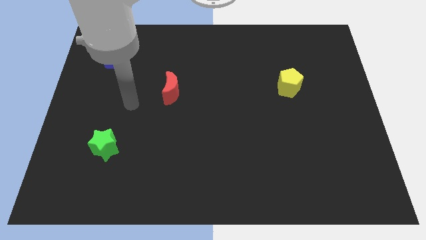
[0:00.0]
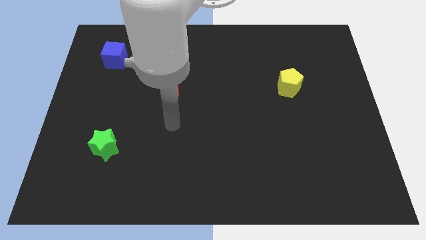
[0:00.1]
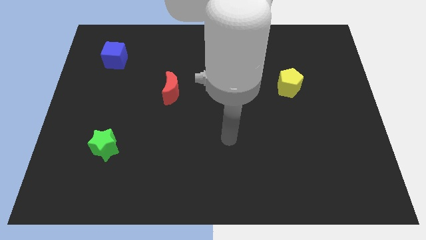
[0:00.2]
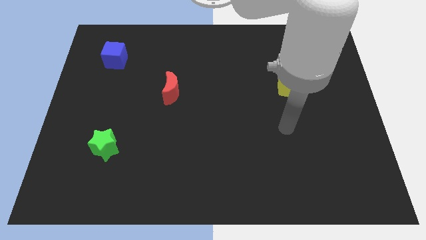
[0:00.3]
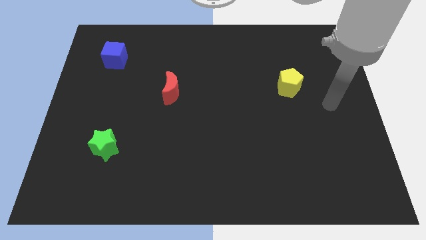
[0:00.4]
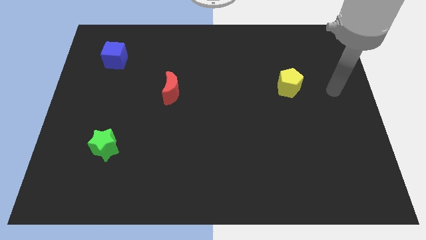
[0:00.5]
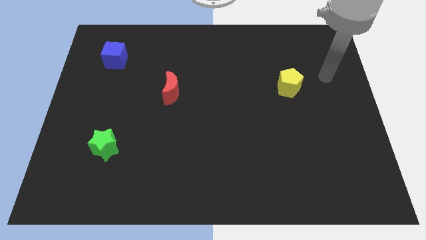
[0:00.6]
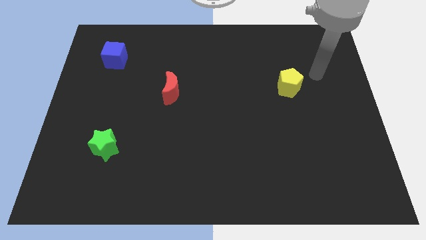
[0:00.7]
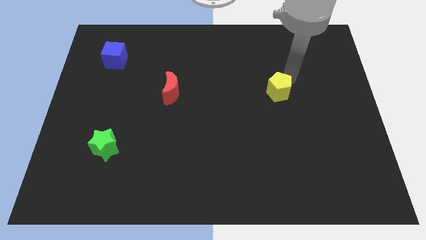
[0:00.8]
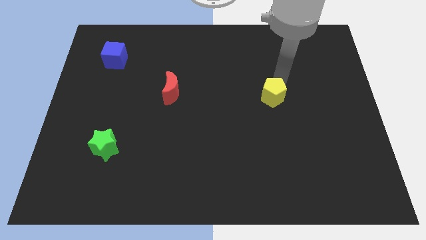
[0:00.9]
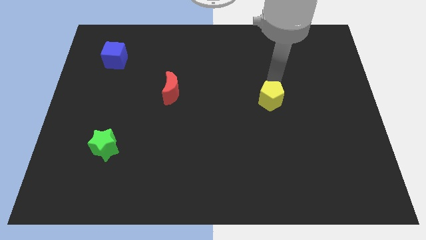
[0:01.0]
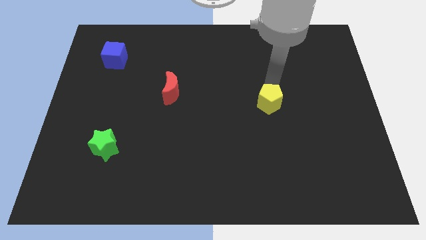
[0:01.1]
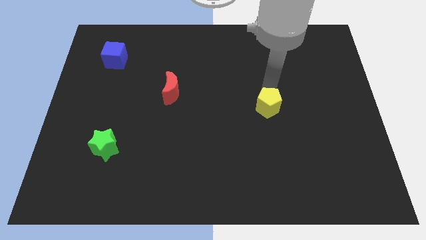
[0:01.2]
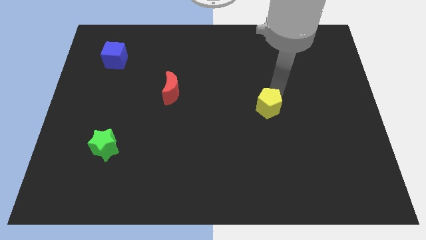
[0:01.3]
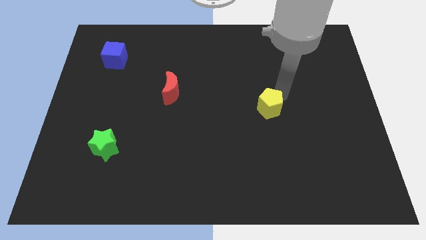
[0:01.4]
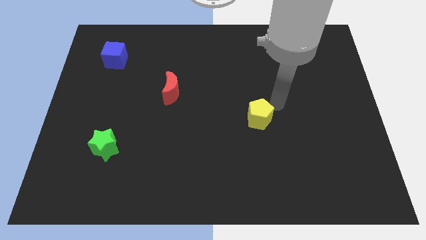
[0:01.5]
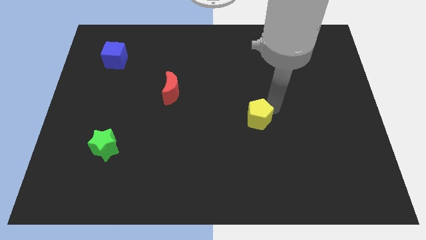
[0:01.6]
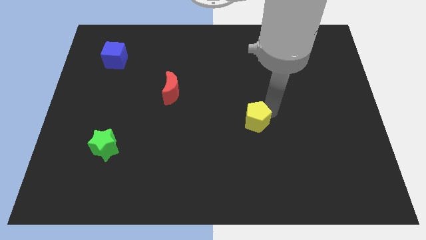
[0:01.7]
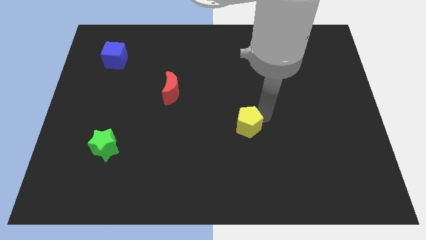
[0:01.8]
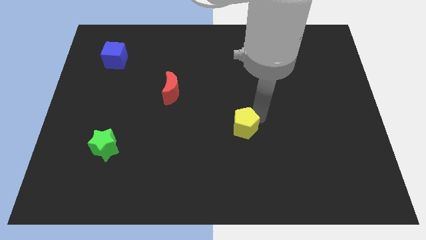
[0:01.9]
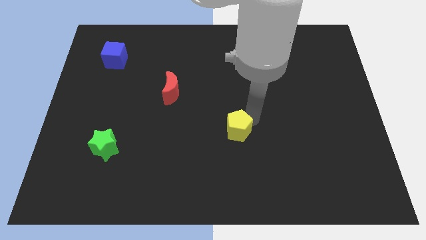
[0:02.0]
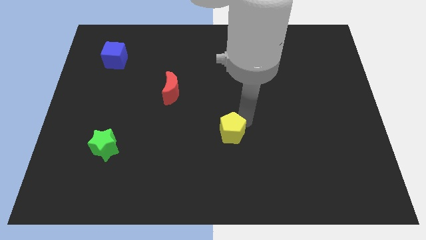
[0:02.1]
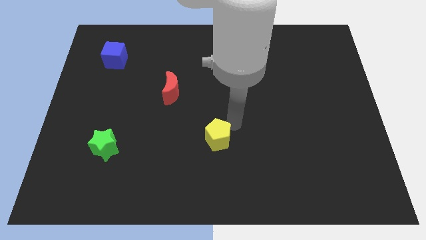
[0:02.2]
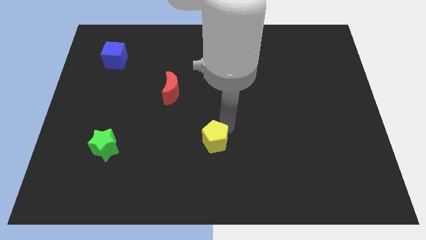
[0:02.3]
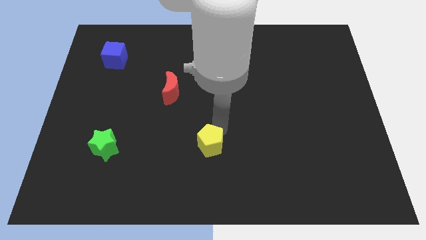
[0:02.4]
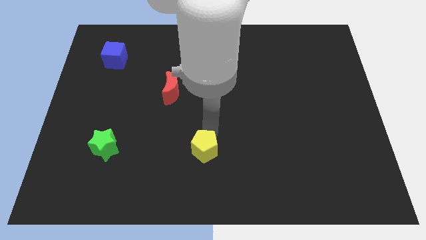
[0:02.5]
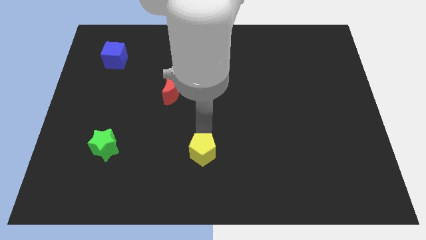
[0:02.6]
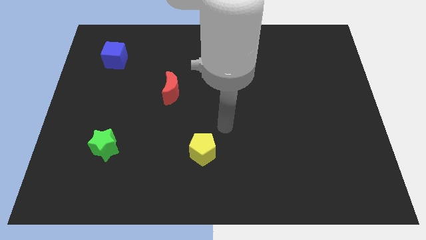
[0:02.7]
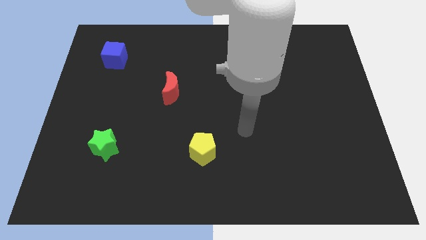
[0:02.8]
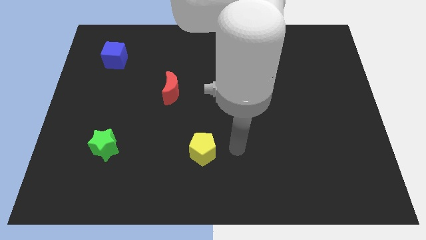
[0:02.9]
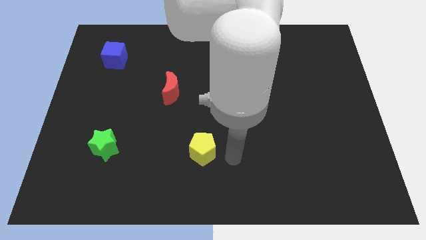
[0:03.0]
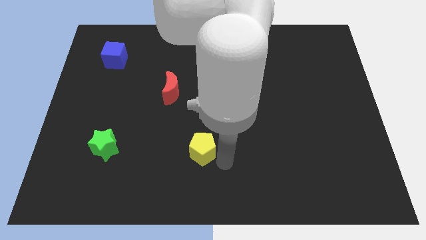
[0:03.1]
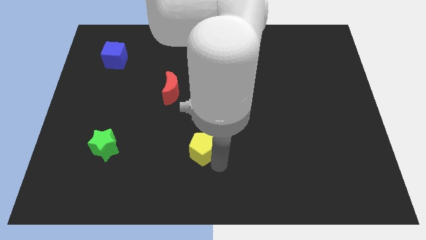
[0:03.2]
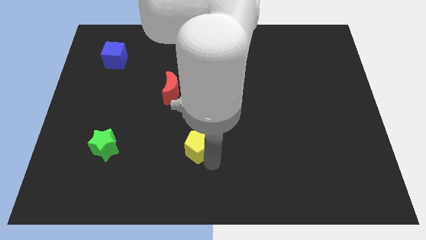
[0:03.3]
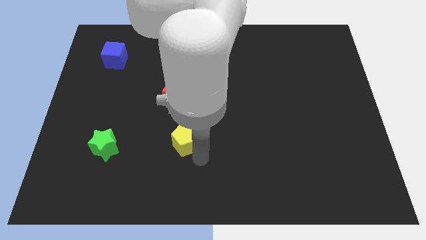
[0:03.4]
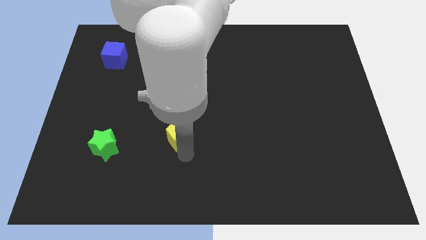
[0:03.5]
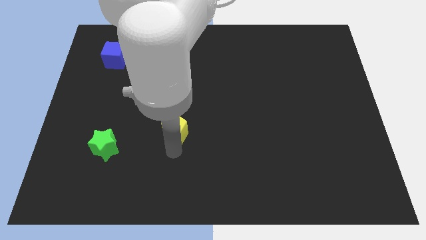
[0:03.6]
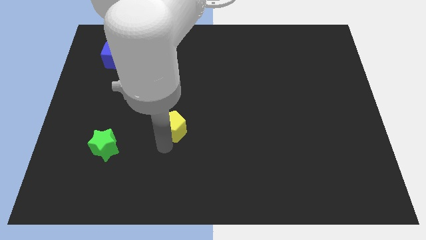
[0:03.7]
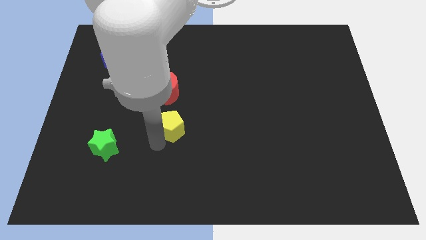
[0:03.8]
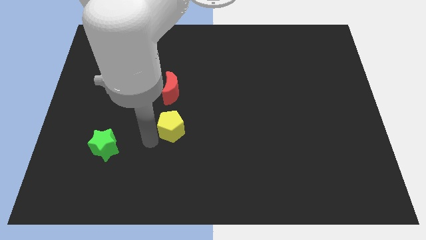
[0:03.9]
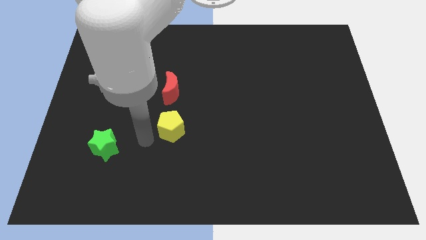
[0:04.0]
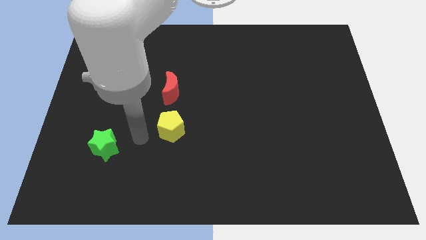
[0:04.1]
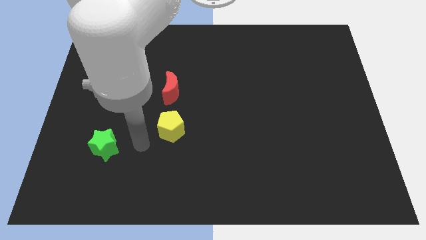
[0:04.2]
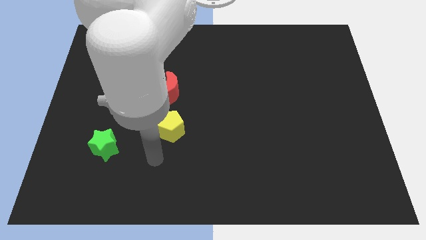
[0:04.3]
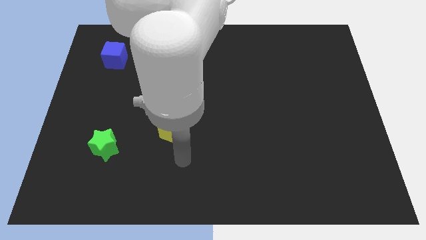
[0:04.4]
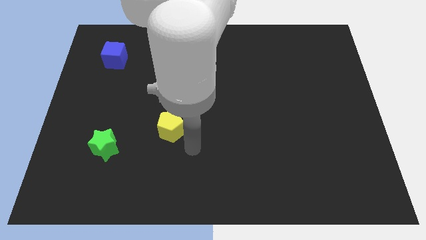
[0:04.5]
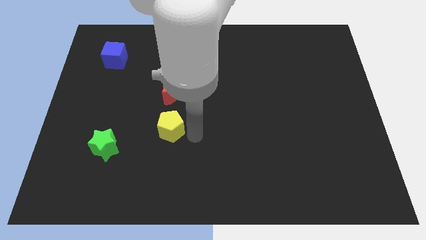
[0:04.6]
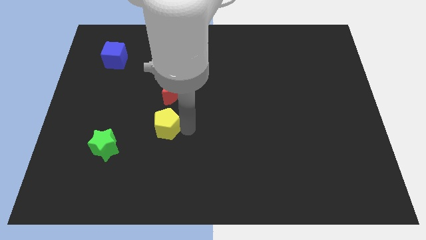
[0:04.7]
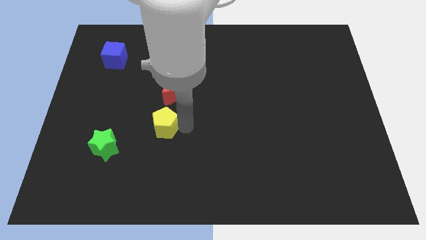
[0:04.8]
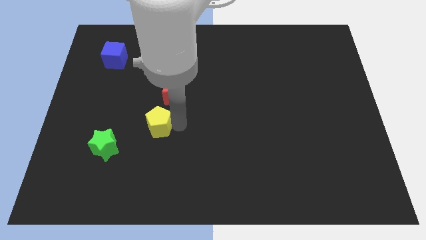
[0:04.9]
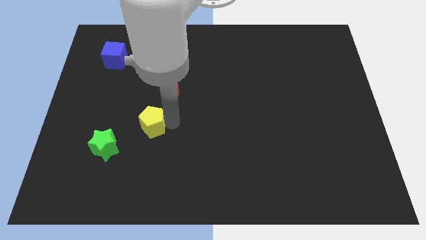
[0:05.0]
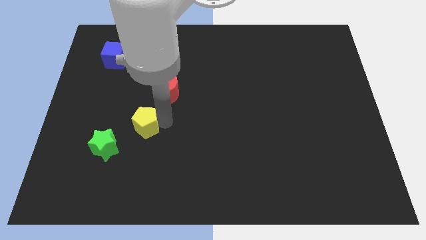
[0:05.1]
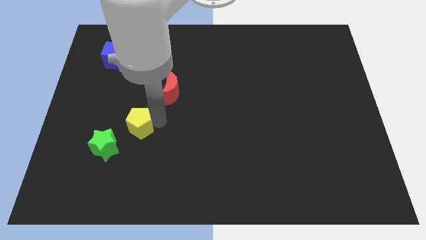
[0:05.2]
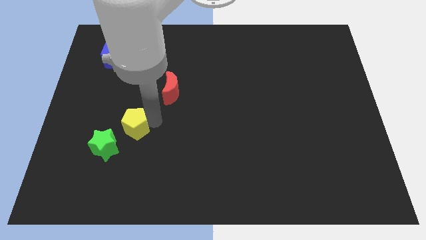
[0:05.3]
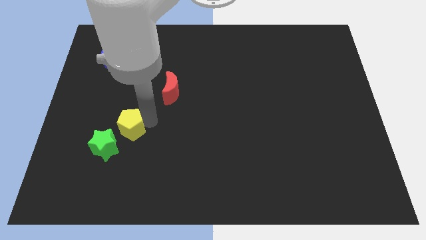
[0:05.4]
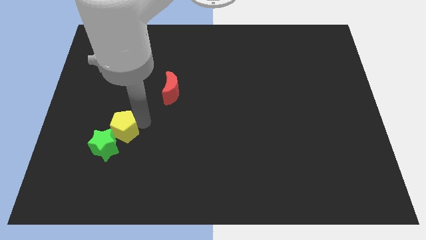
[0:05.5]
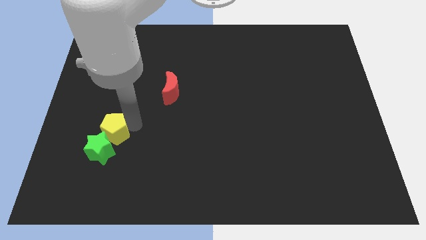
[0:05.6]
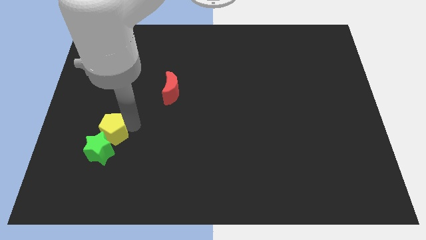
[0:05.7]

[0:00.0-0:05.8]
push the yellow block to the green star

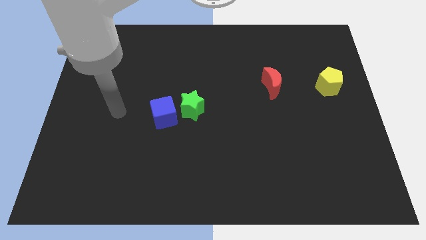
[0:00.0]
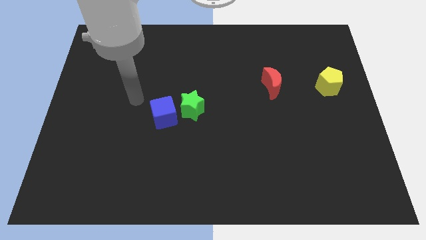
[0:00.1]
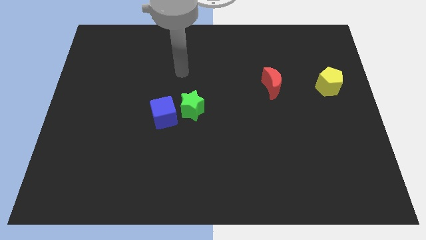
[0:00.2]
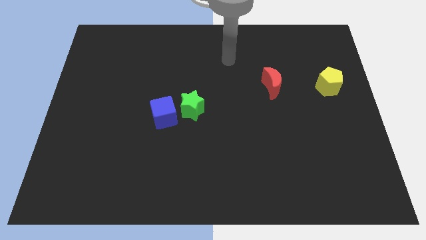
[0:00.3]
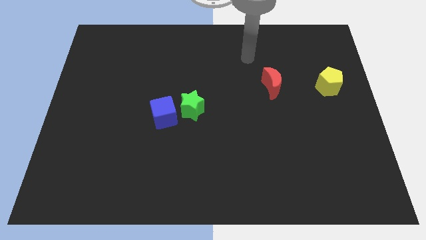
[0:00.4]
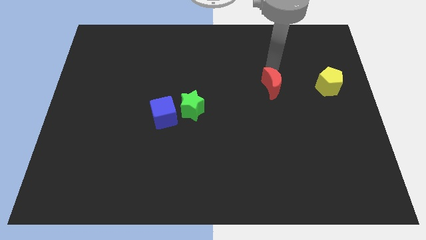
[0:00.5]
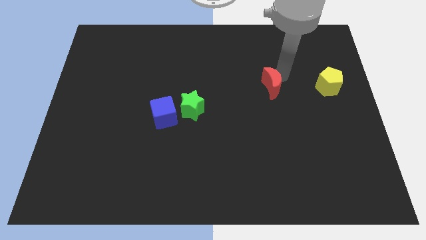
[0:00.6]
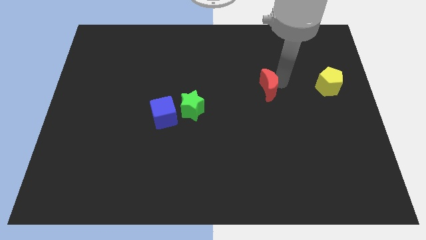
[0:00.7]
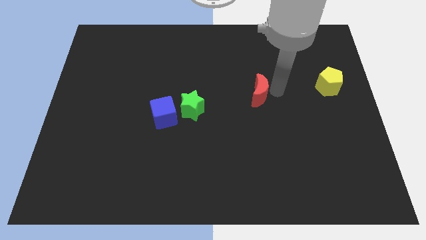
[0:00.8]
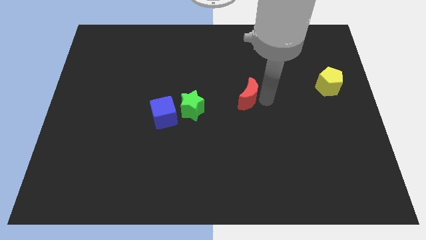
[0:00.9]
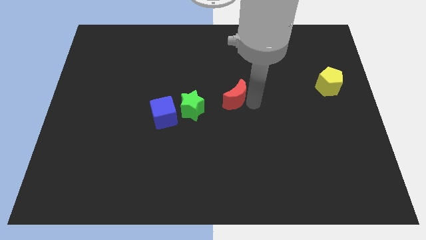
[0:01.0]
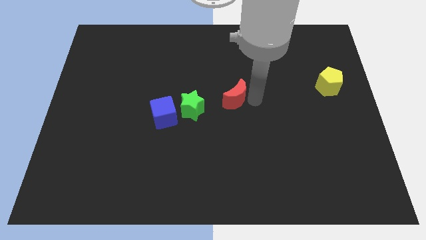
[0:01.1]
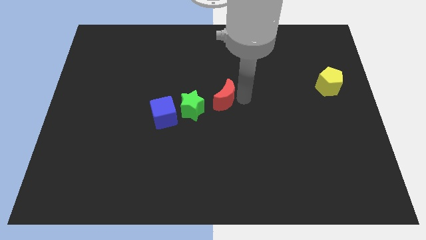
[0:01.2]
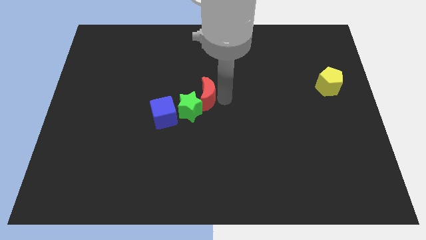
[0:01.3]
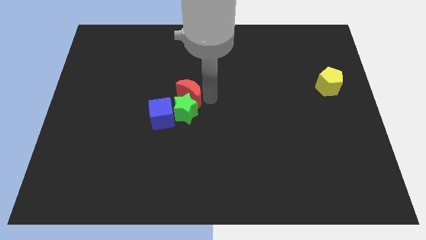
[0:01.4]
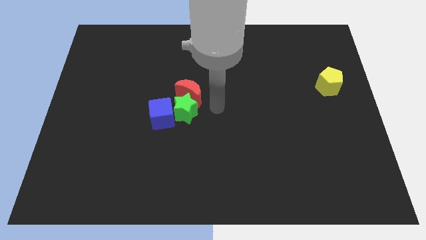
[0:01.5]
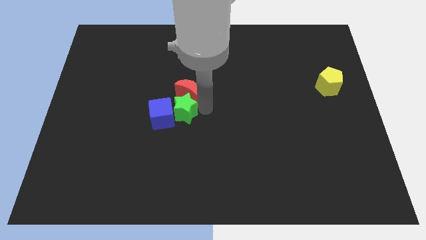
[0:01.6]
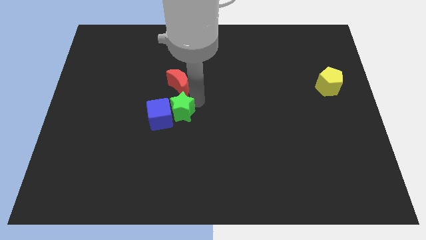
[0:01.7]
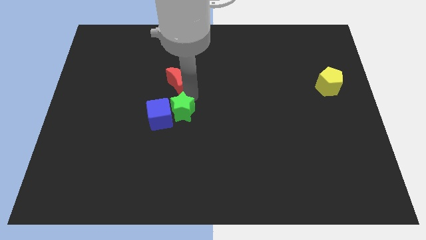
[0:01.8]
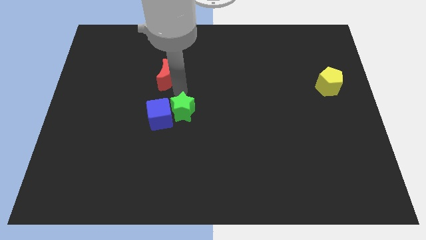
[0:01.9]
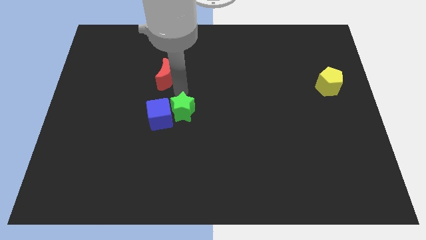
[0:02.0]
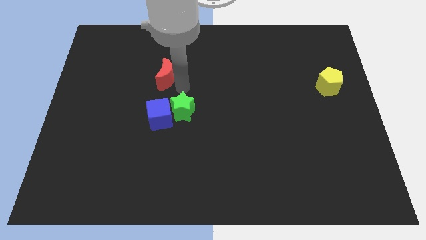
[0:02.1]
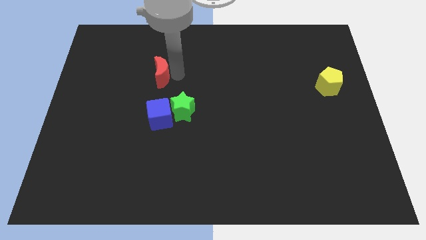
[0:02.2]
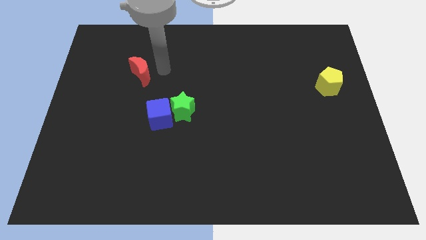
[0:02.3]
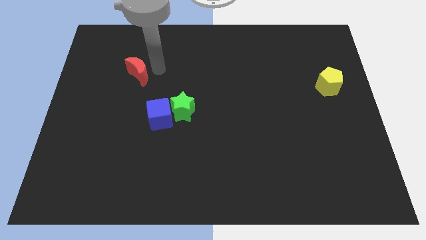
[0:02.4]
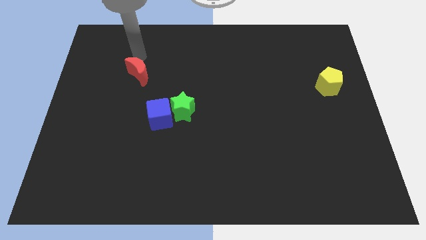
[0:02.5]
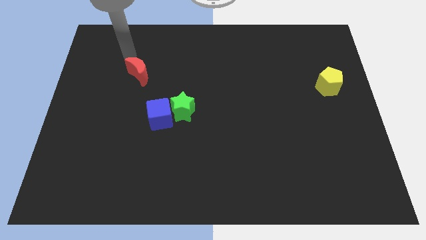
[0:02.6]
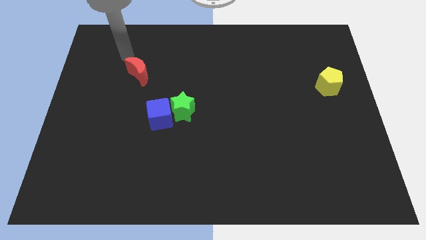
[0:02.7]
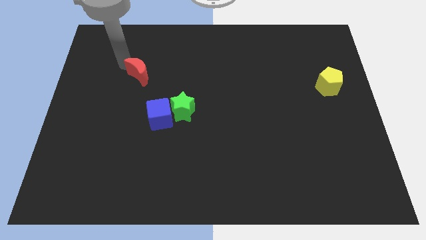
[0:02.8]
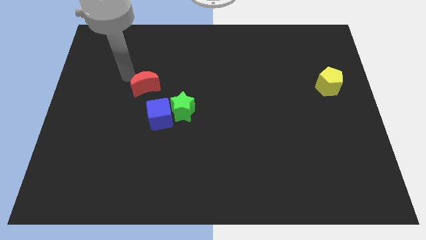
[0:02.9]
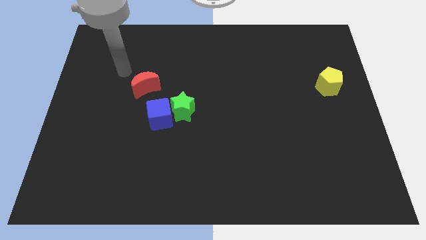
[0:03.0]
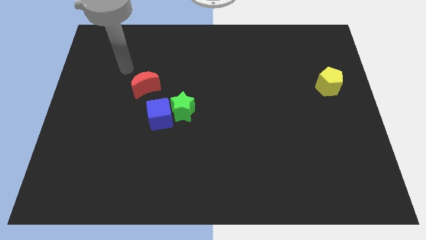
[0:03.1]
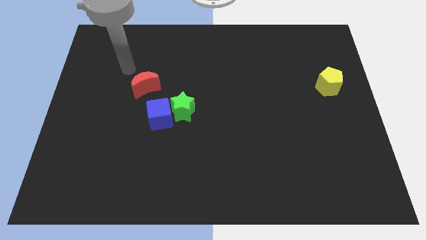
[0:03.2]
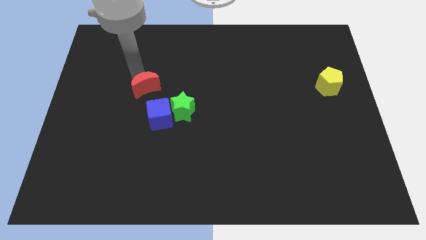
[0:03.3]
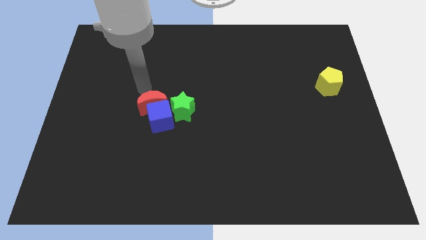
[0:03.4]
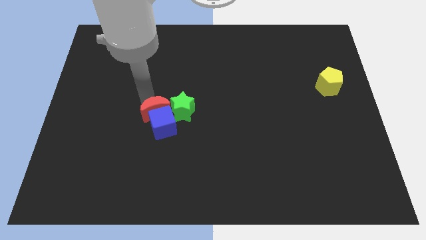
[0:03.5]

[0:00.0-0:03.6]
put the red moon towards the blue block
